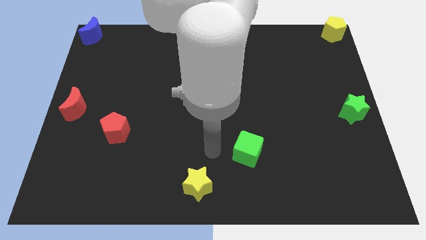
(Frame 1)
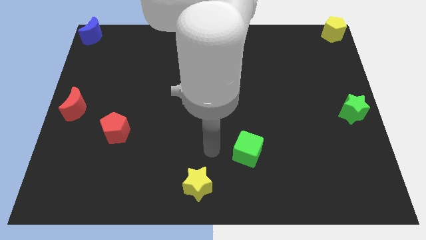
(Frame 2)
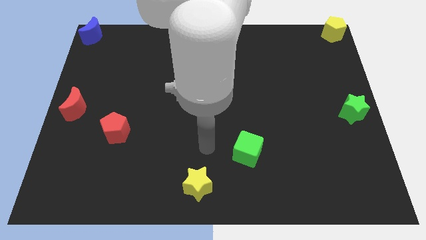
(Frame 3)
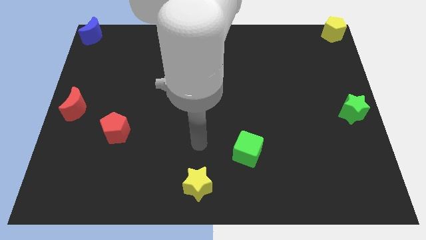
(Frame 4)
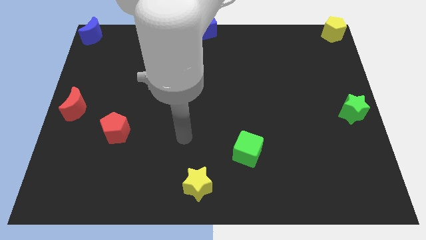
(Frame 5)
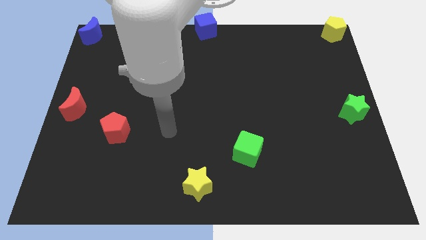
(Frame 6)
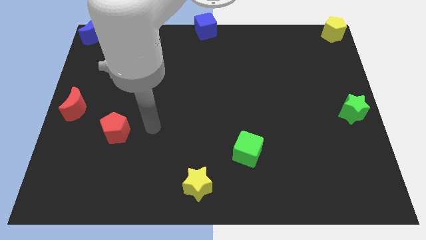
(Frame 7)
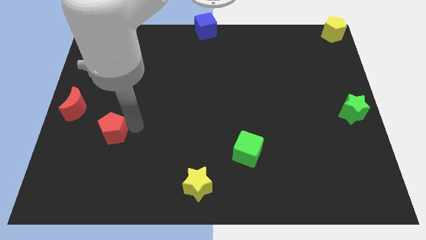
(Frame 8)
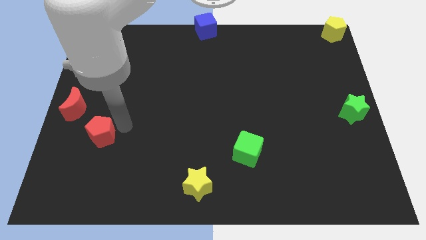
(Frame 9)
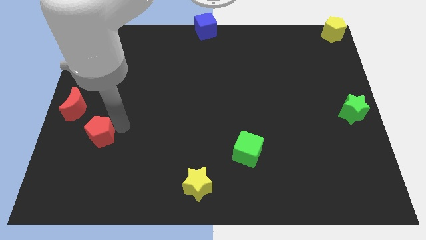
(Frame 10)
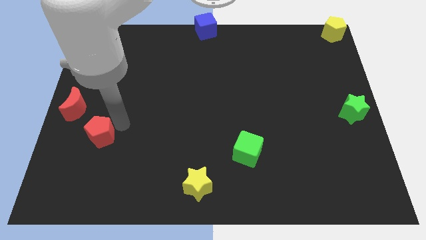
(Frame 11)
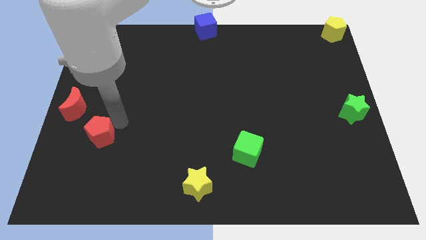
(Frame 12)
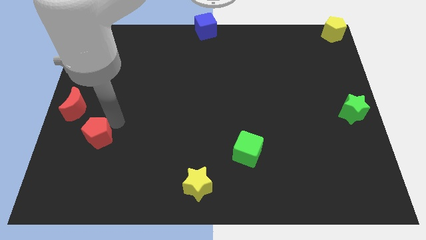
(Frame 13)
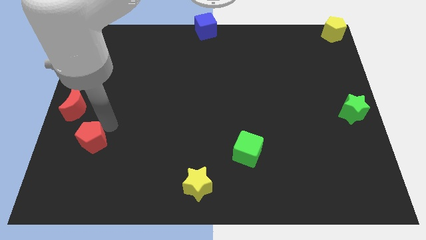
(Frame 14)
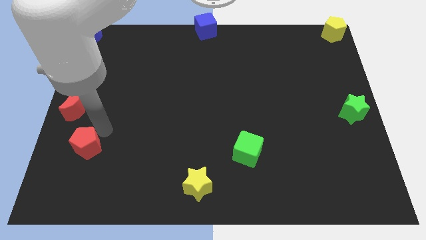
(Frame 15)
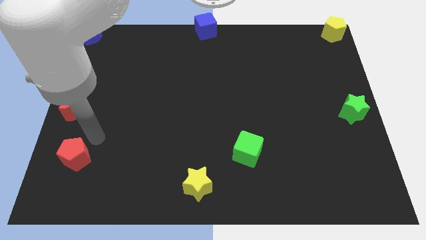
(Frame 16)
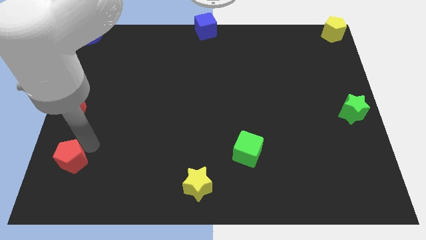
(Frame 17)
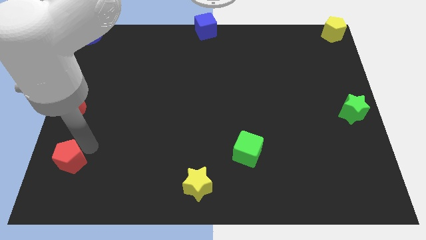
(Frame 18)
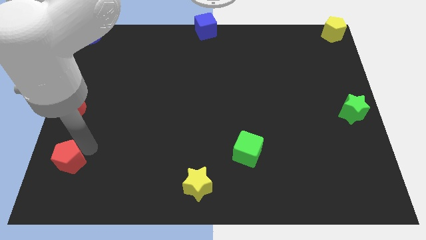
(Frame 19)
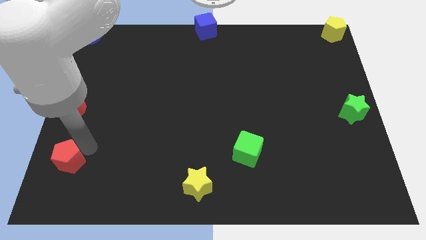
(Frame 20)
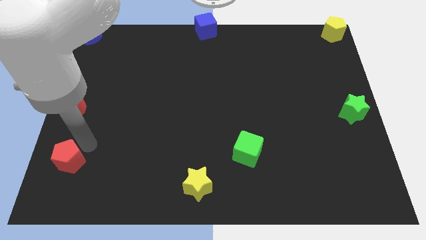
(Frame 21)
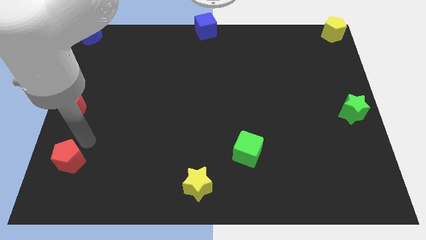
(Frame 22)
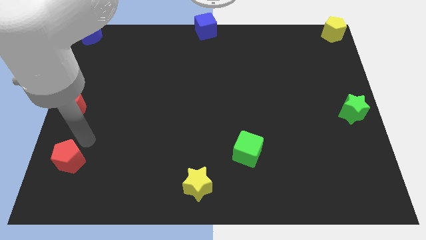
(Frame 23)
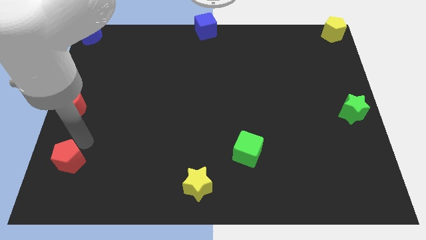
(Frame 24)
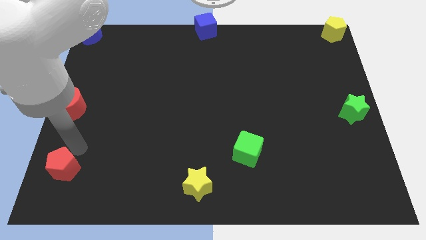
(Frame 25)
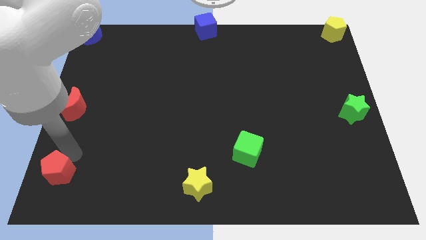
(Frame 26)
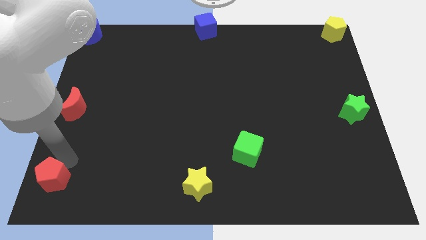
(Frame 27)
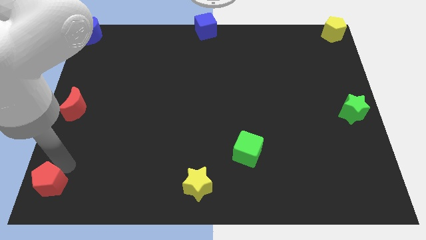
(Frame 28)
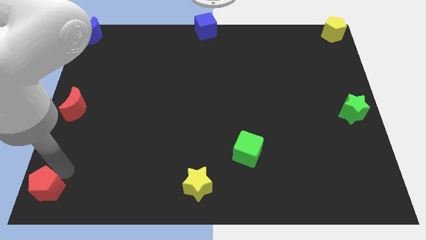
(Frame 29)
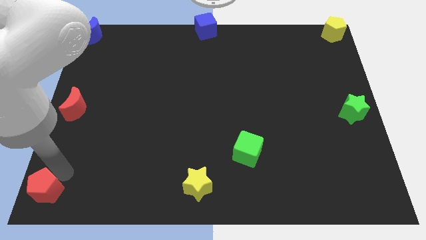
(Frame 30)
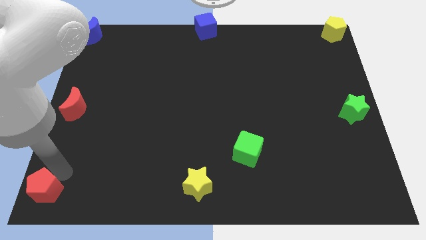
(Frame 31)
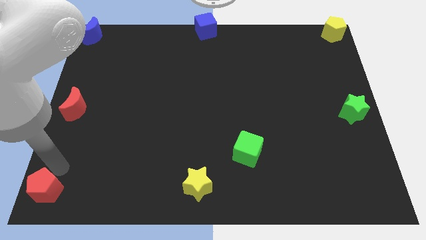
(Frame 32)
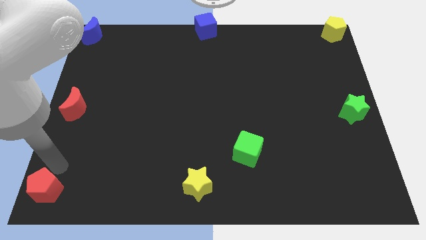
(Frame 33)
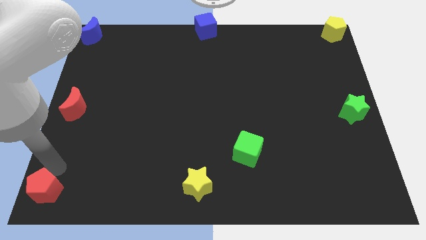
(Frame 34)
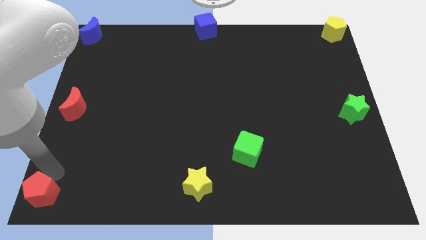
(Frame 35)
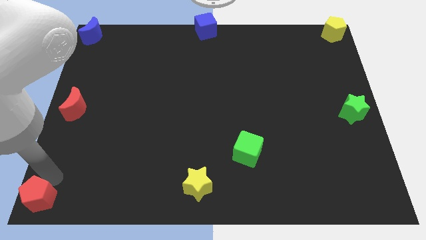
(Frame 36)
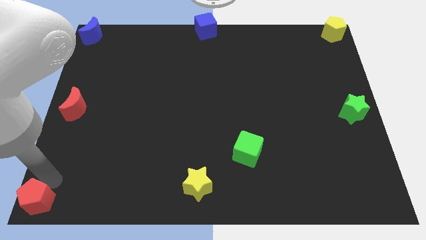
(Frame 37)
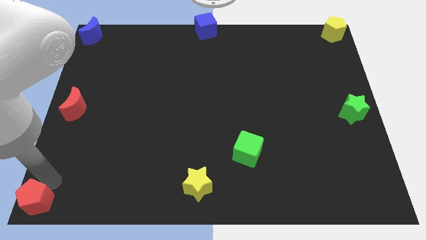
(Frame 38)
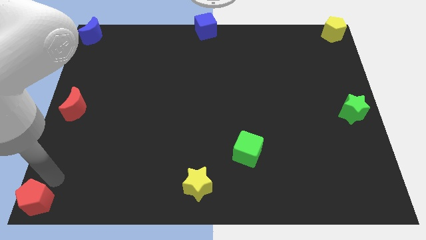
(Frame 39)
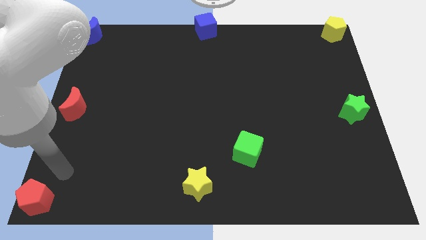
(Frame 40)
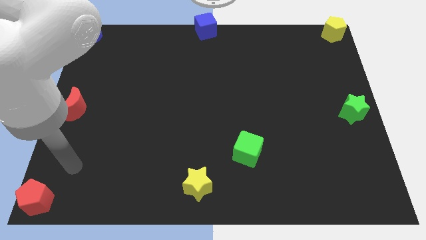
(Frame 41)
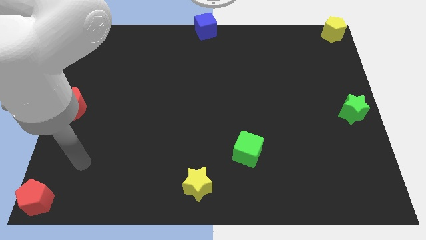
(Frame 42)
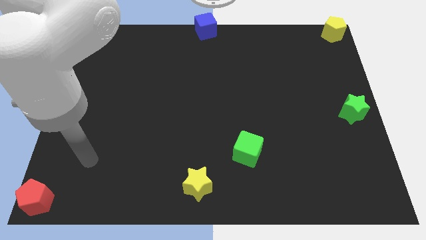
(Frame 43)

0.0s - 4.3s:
place the red pentagon at the bottom left corner of the board

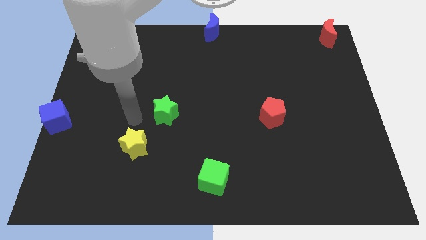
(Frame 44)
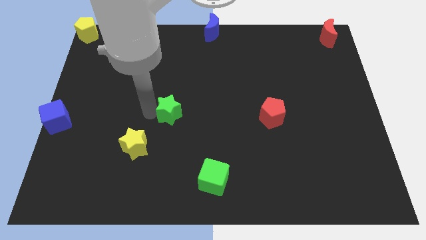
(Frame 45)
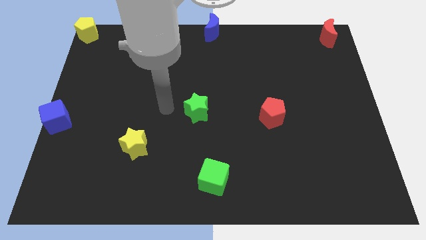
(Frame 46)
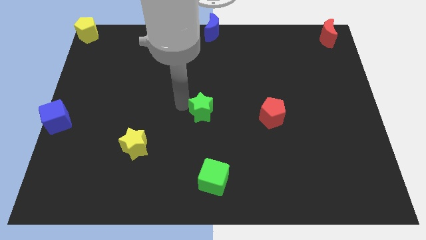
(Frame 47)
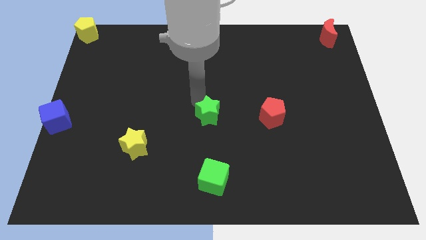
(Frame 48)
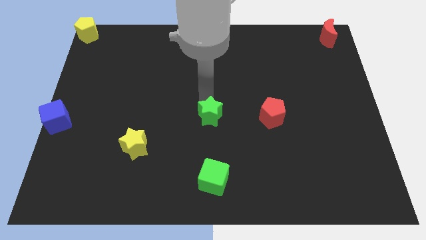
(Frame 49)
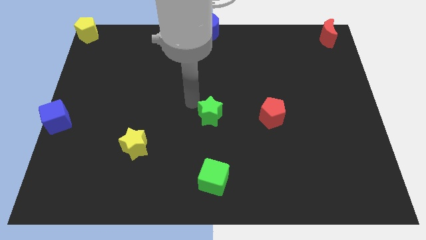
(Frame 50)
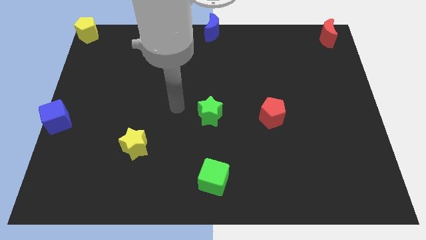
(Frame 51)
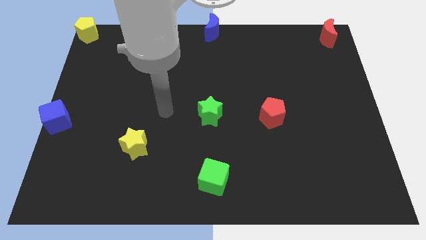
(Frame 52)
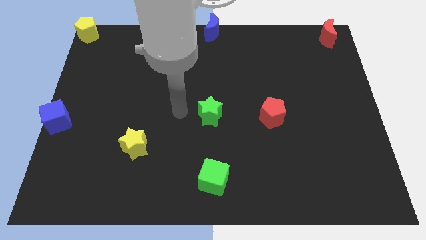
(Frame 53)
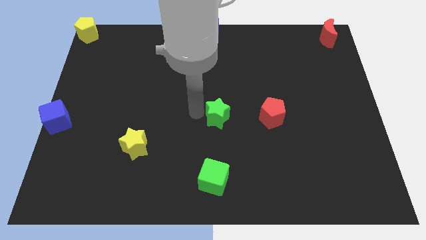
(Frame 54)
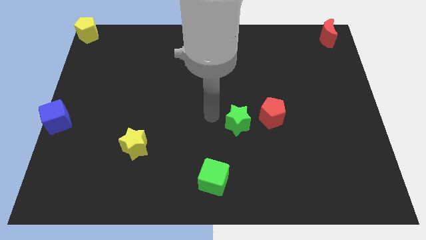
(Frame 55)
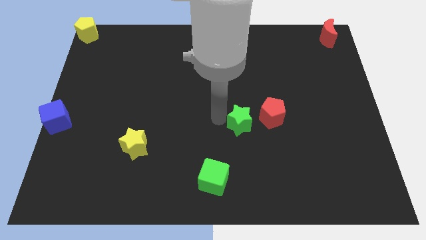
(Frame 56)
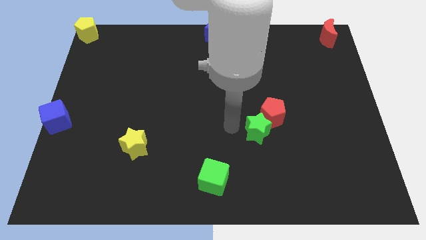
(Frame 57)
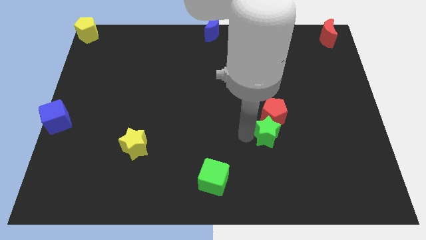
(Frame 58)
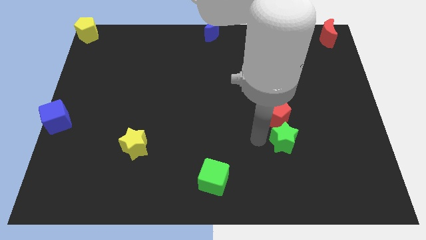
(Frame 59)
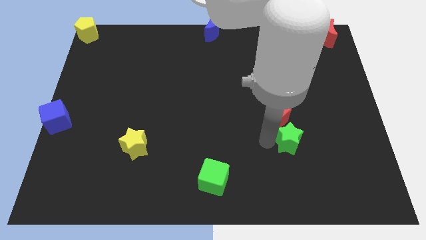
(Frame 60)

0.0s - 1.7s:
push green star below red pentagon

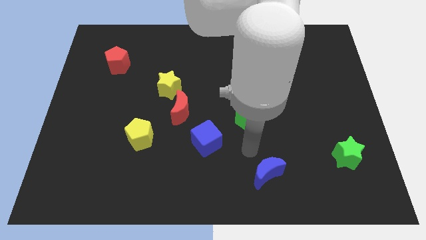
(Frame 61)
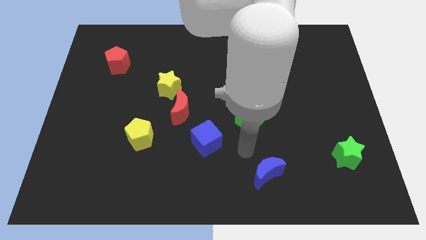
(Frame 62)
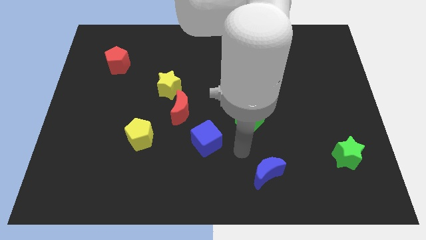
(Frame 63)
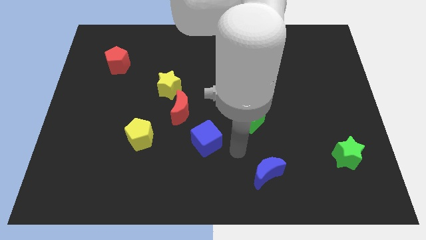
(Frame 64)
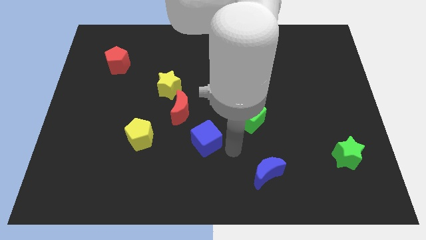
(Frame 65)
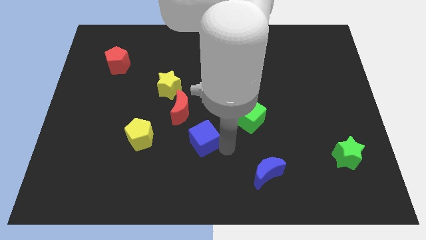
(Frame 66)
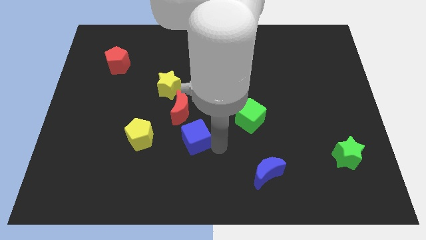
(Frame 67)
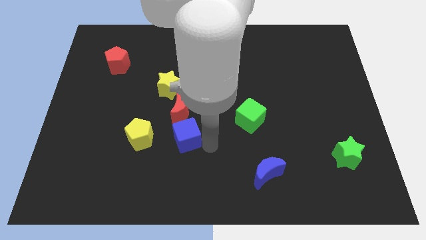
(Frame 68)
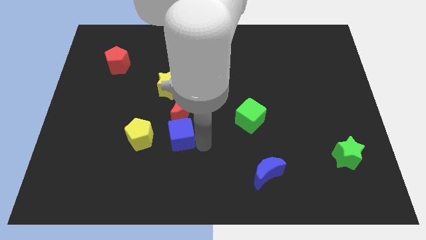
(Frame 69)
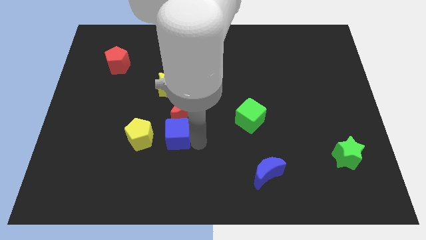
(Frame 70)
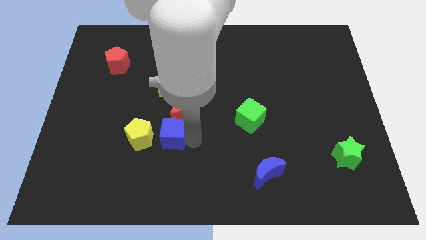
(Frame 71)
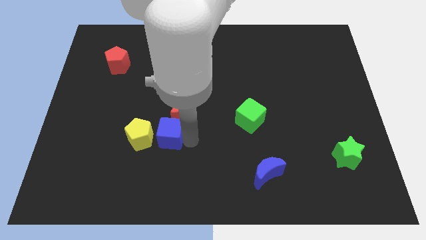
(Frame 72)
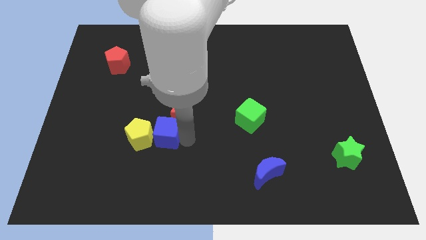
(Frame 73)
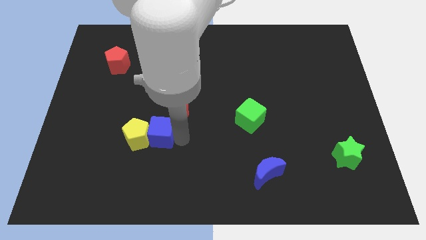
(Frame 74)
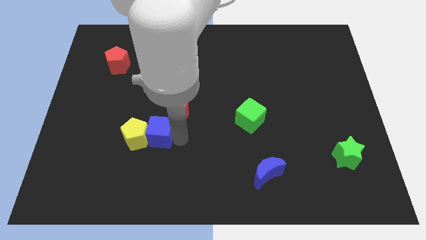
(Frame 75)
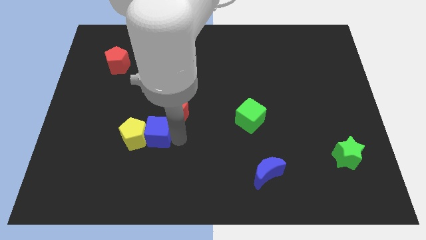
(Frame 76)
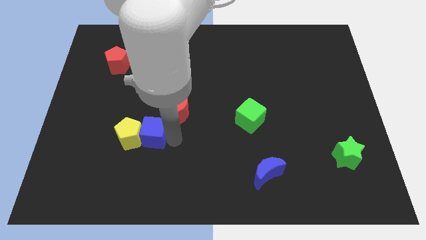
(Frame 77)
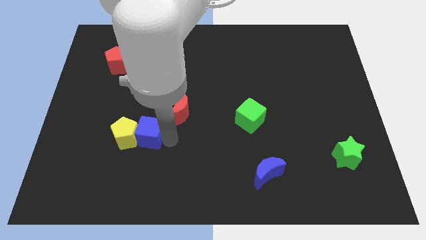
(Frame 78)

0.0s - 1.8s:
move blue cube into yellow pentagon

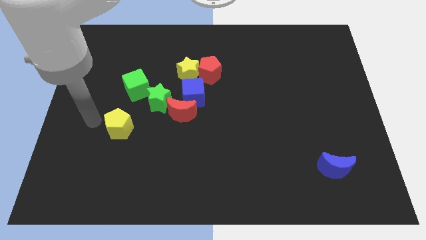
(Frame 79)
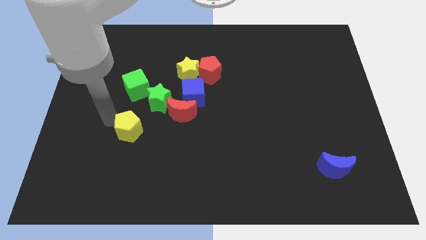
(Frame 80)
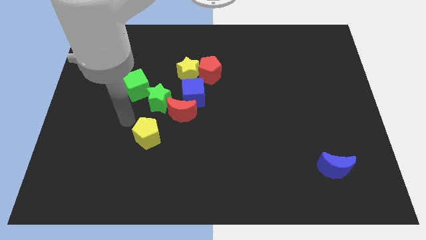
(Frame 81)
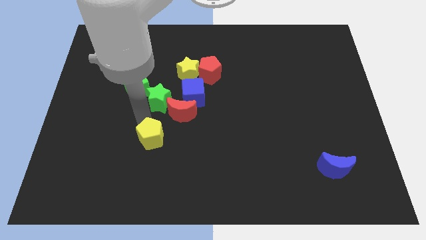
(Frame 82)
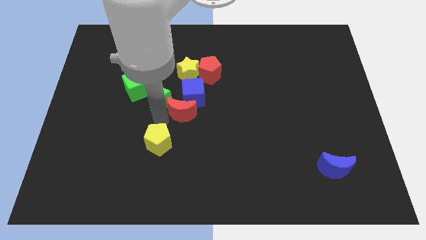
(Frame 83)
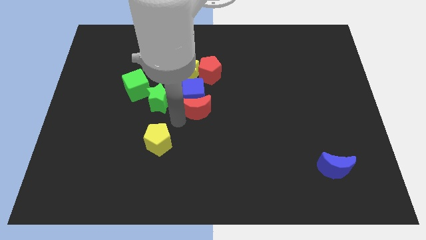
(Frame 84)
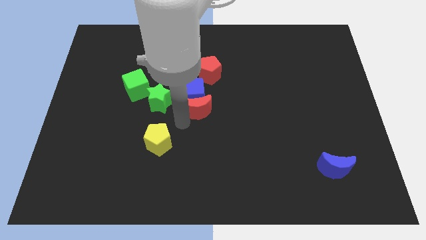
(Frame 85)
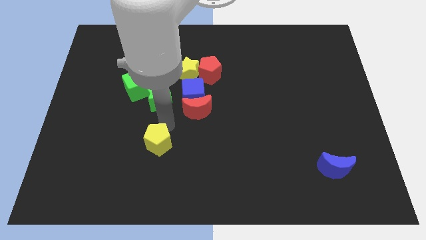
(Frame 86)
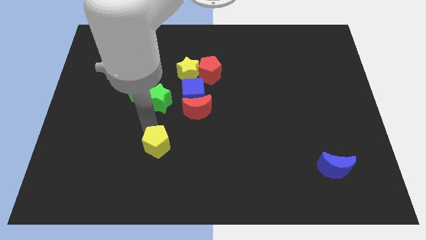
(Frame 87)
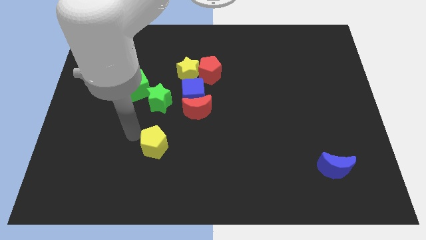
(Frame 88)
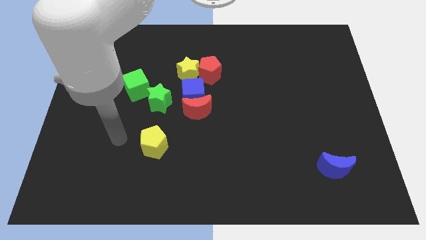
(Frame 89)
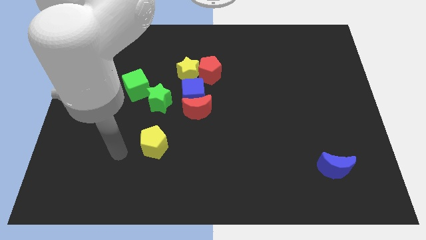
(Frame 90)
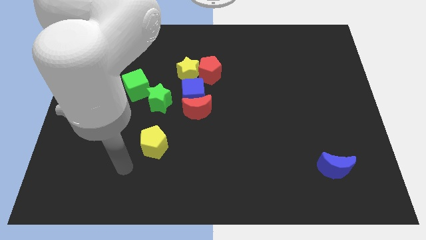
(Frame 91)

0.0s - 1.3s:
place the yellow pentagon below the green star
